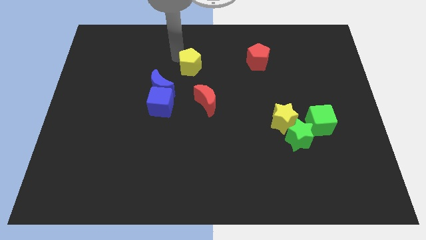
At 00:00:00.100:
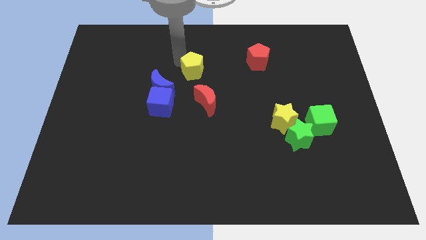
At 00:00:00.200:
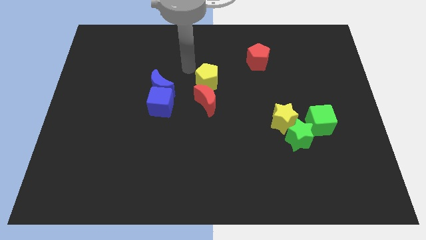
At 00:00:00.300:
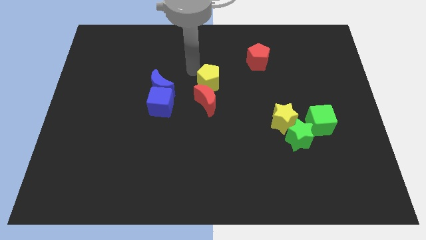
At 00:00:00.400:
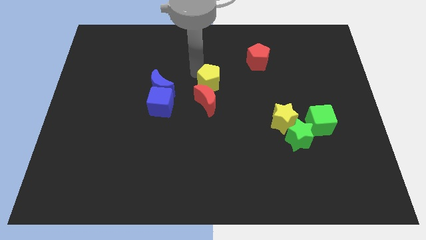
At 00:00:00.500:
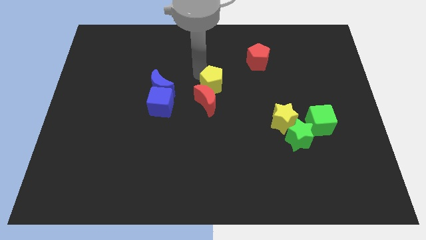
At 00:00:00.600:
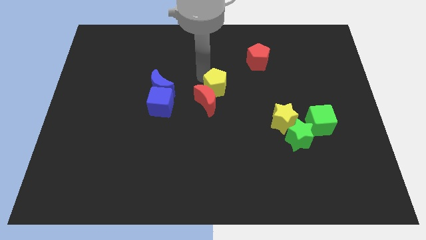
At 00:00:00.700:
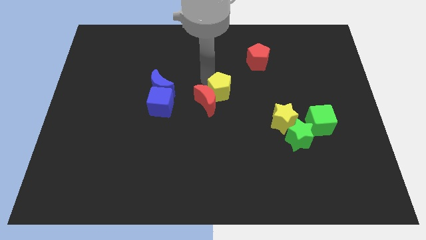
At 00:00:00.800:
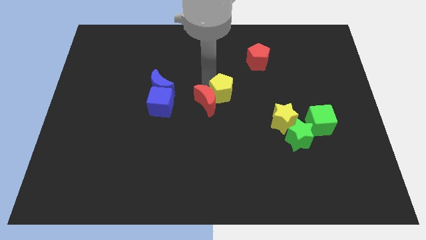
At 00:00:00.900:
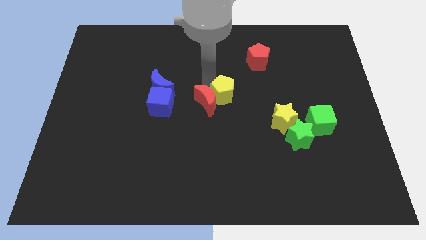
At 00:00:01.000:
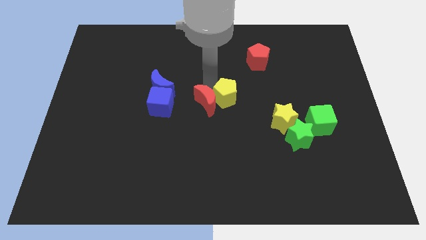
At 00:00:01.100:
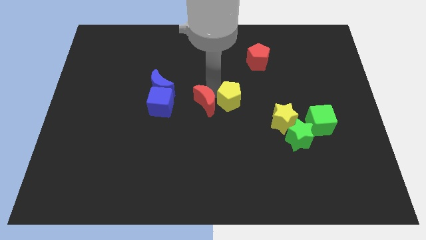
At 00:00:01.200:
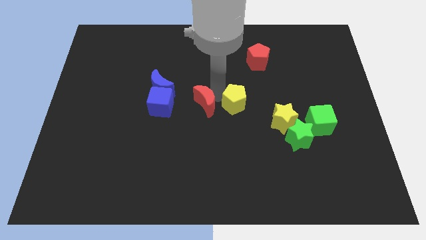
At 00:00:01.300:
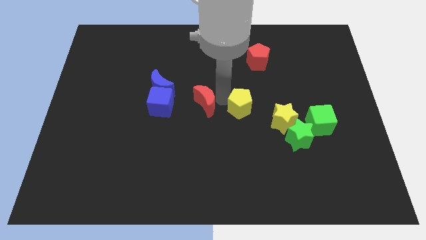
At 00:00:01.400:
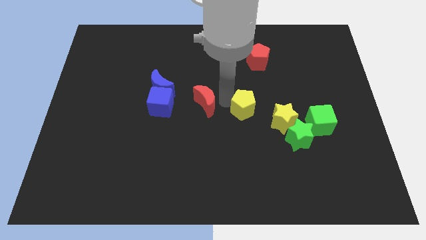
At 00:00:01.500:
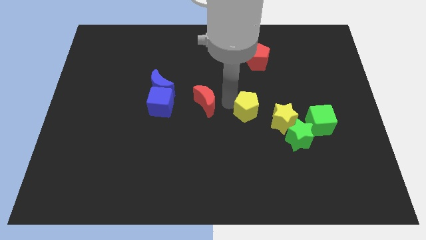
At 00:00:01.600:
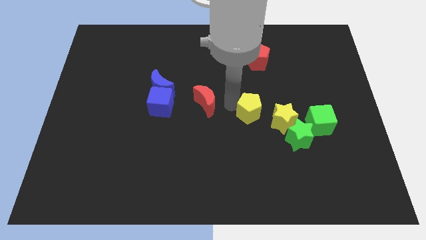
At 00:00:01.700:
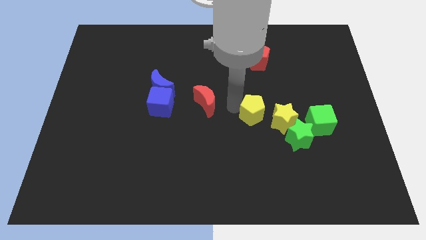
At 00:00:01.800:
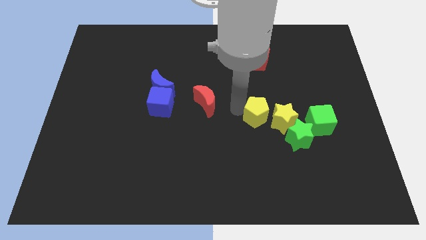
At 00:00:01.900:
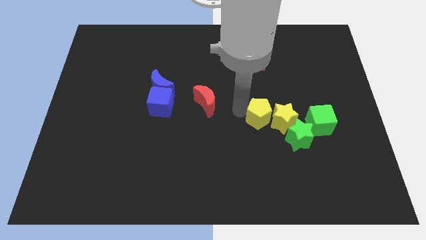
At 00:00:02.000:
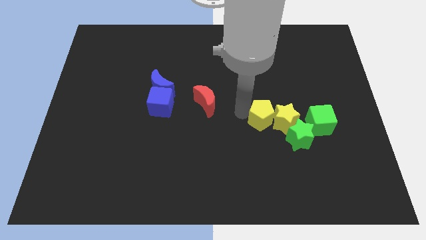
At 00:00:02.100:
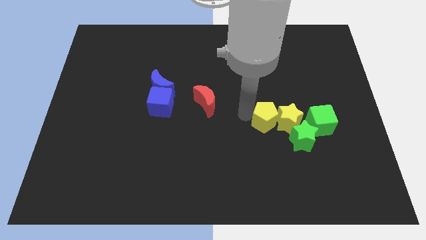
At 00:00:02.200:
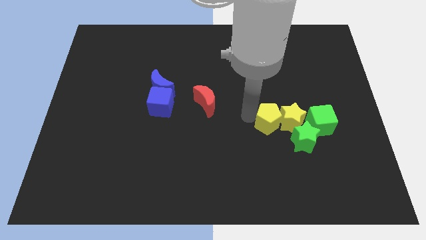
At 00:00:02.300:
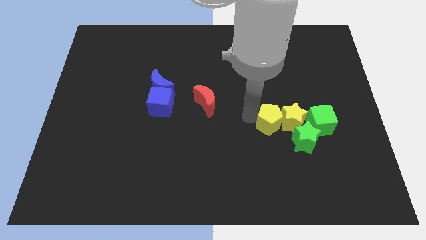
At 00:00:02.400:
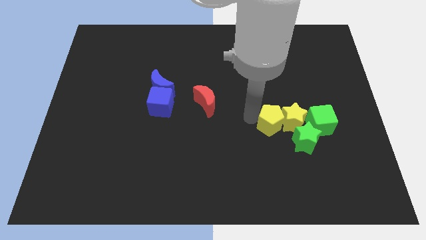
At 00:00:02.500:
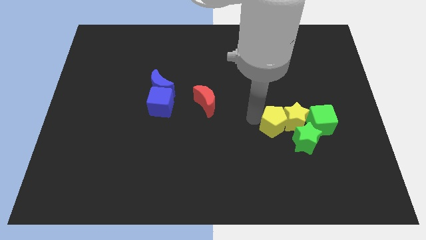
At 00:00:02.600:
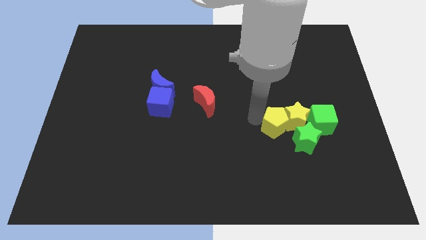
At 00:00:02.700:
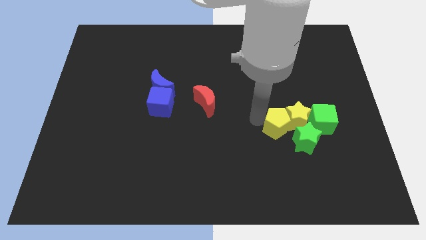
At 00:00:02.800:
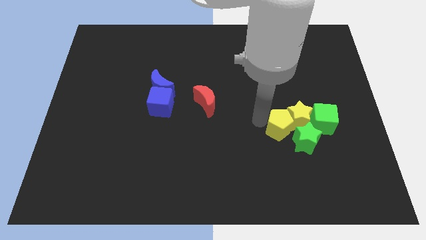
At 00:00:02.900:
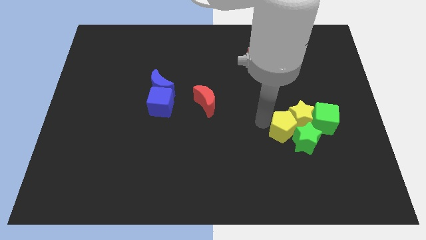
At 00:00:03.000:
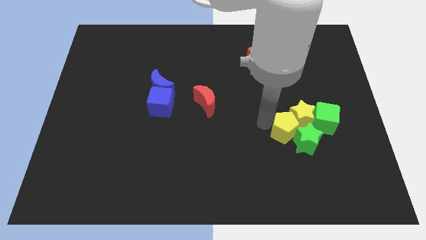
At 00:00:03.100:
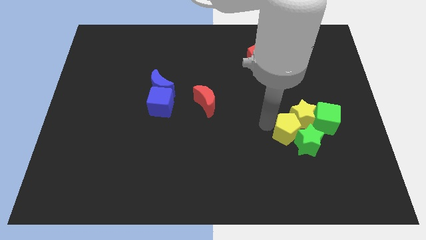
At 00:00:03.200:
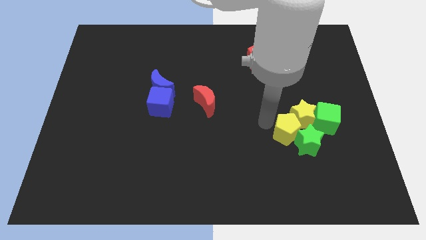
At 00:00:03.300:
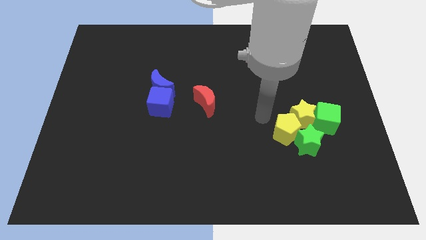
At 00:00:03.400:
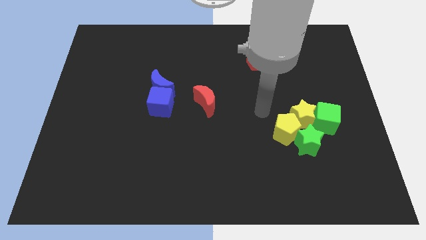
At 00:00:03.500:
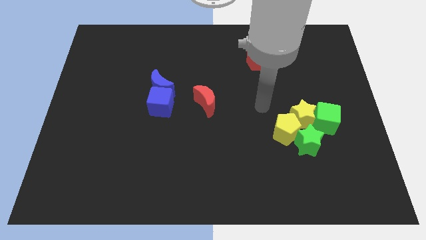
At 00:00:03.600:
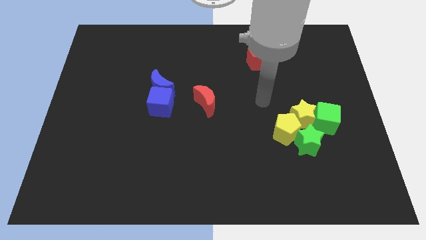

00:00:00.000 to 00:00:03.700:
push the green and yellow blocks towards the right side of the board

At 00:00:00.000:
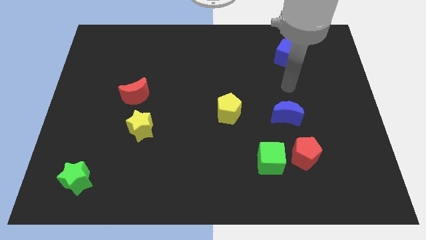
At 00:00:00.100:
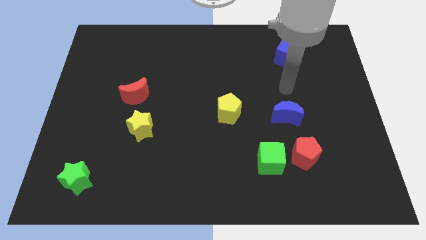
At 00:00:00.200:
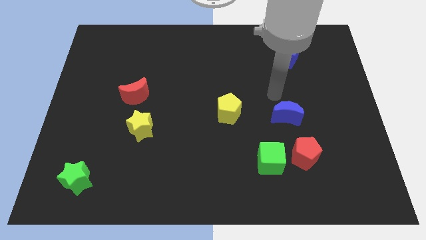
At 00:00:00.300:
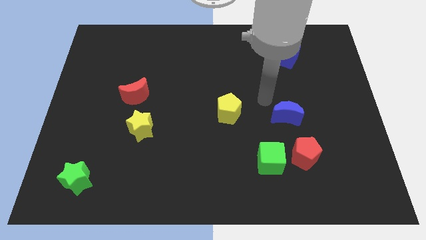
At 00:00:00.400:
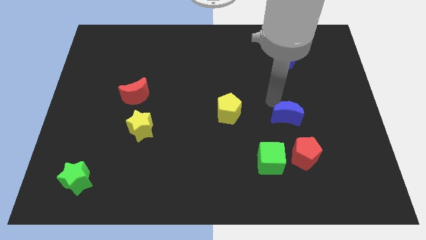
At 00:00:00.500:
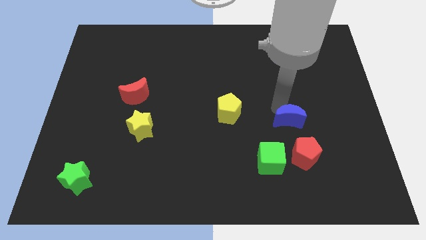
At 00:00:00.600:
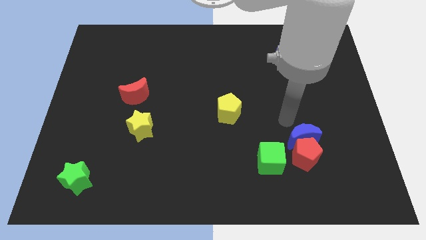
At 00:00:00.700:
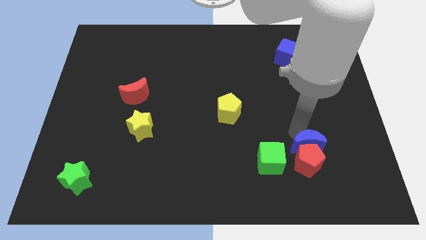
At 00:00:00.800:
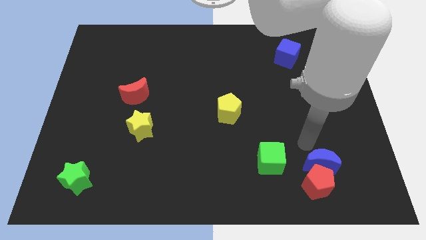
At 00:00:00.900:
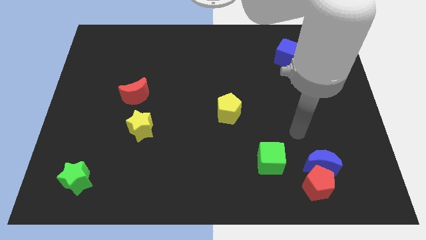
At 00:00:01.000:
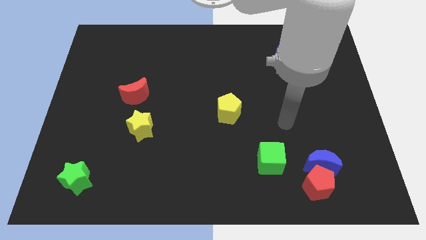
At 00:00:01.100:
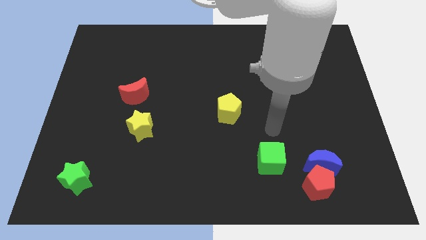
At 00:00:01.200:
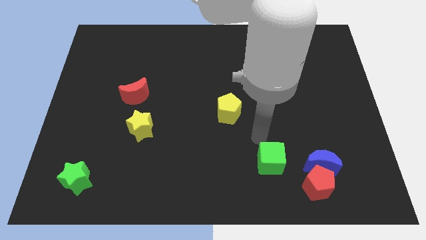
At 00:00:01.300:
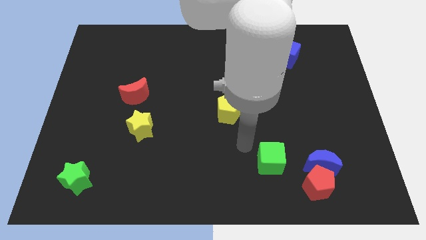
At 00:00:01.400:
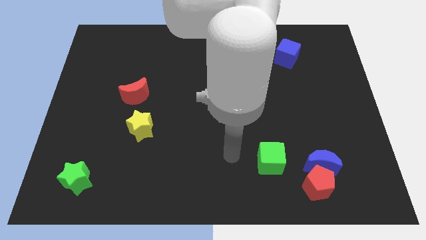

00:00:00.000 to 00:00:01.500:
push the blue crescent into the red pentagon

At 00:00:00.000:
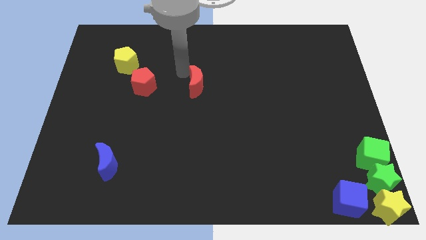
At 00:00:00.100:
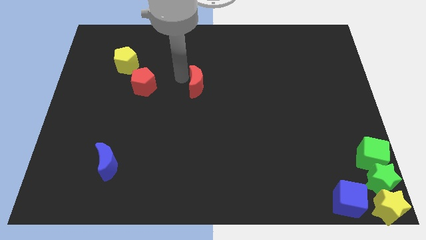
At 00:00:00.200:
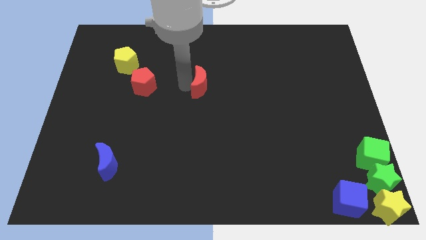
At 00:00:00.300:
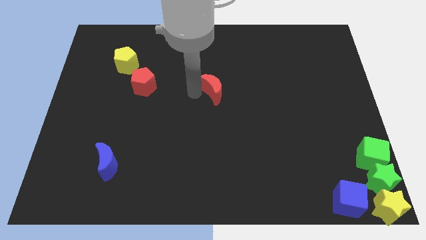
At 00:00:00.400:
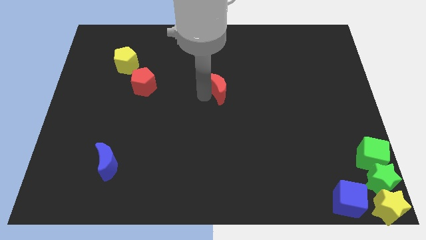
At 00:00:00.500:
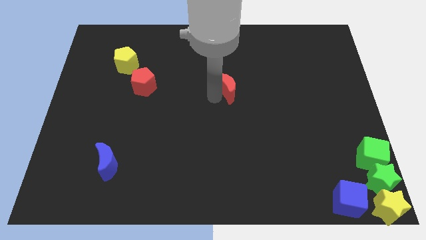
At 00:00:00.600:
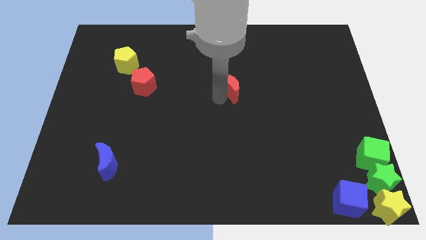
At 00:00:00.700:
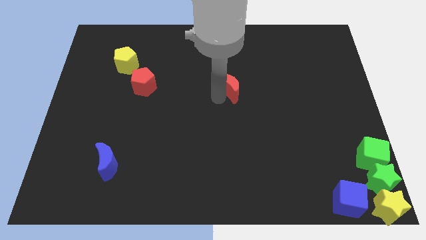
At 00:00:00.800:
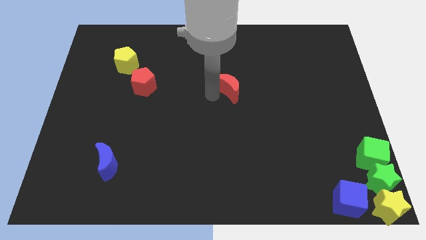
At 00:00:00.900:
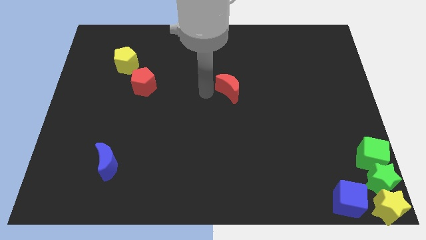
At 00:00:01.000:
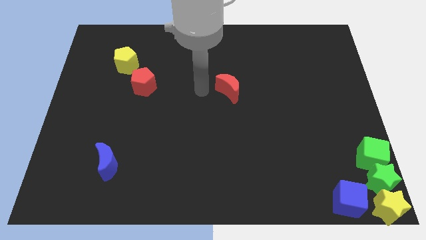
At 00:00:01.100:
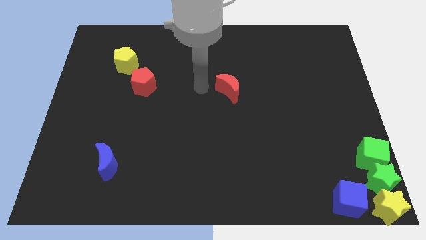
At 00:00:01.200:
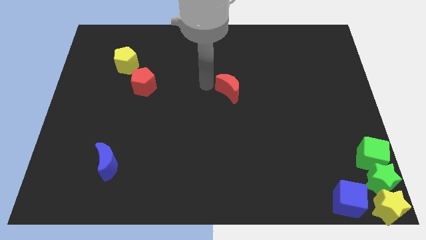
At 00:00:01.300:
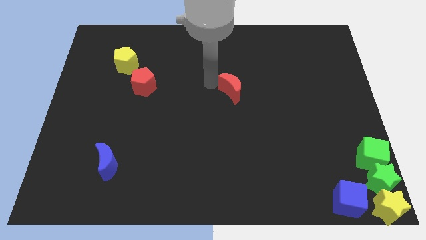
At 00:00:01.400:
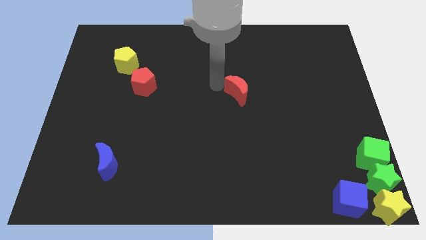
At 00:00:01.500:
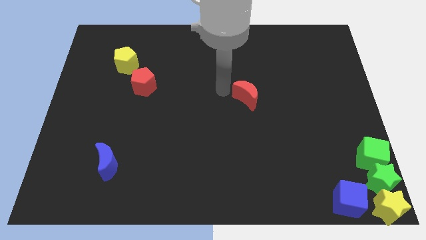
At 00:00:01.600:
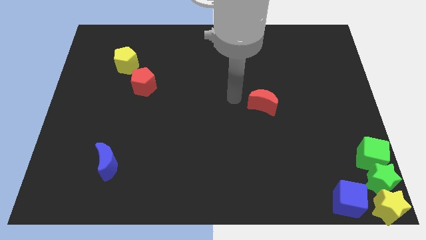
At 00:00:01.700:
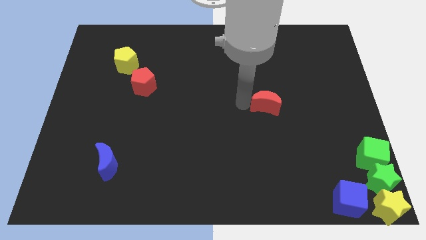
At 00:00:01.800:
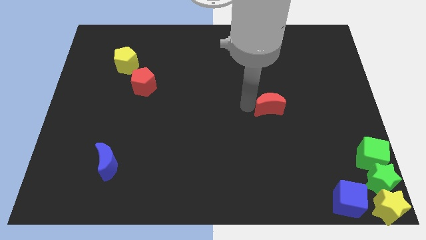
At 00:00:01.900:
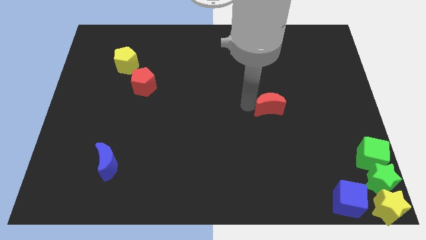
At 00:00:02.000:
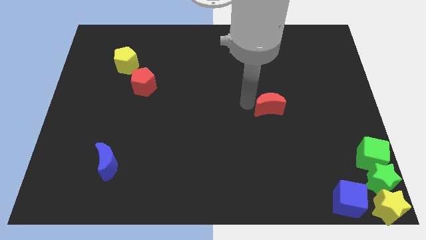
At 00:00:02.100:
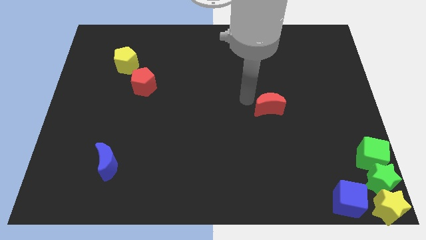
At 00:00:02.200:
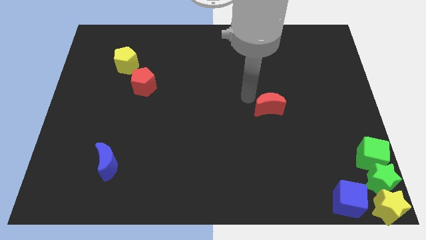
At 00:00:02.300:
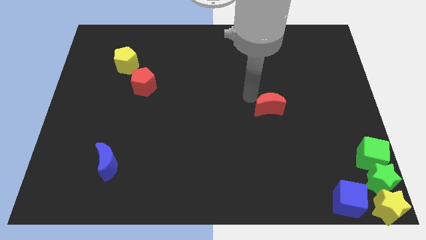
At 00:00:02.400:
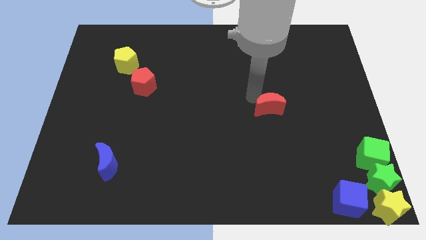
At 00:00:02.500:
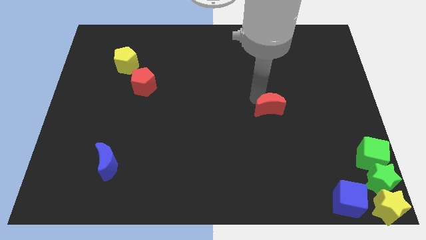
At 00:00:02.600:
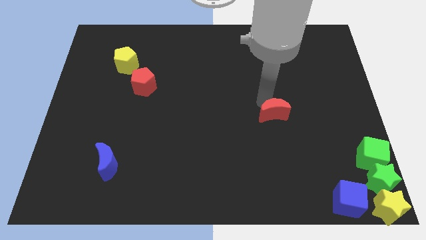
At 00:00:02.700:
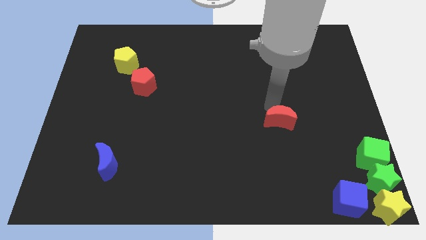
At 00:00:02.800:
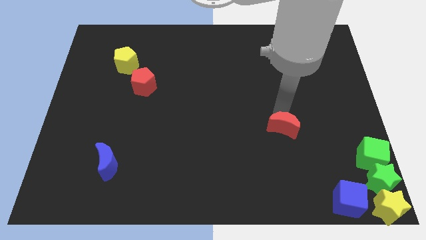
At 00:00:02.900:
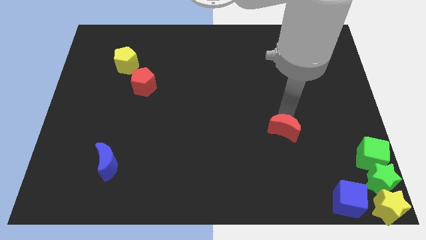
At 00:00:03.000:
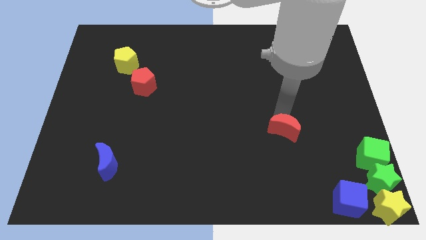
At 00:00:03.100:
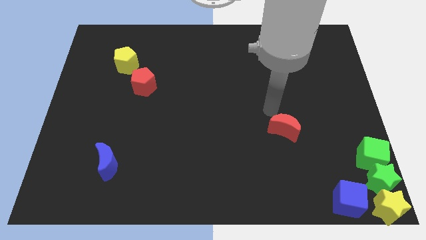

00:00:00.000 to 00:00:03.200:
move the red moon towards the bottom right

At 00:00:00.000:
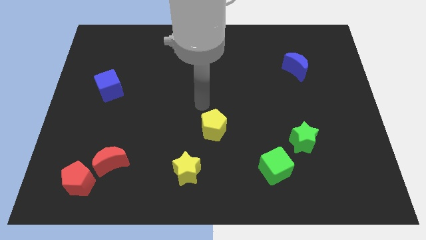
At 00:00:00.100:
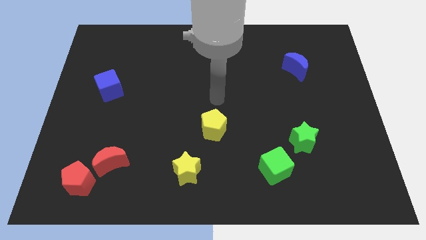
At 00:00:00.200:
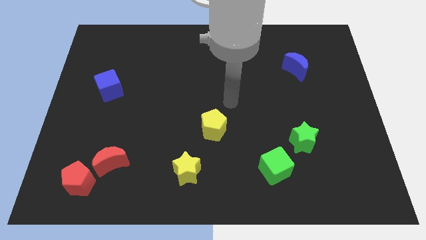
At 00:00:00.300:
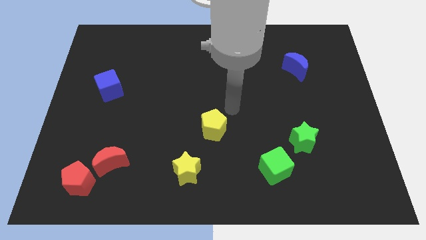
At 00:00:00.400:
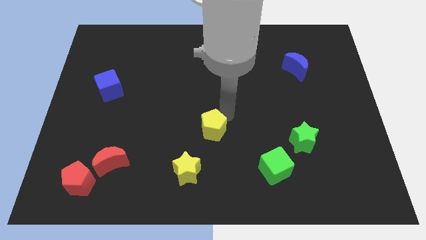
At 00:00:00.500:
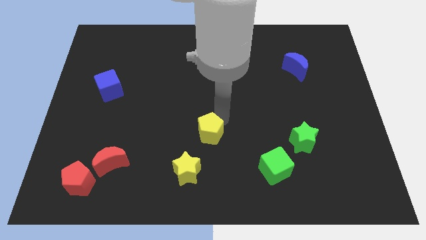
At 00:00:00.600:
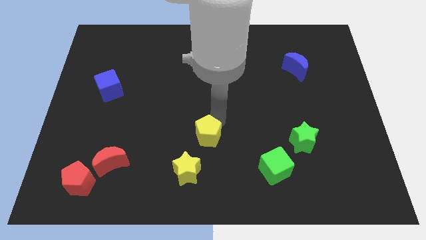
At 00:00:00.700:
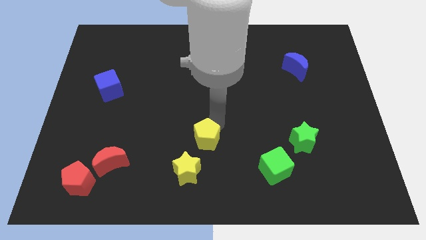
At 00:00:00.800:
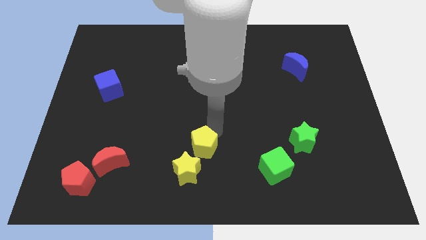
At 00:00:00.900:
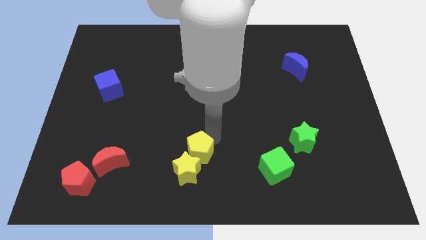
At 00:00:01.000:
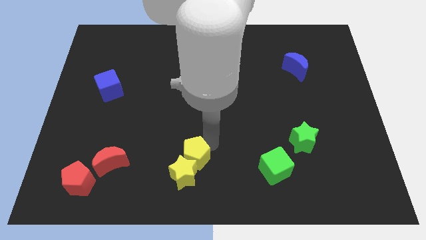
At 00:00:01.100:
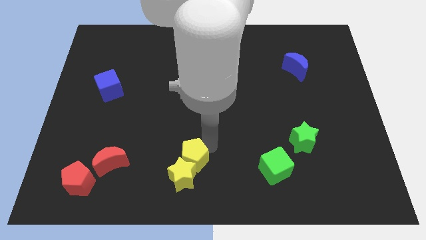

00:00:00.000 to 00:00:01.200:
push yellow pentagon into yellow star
